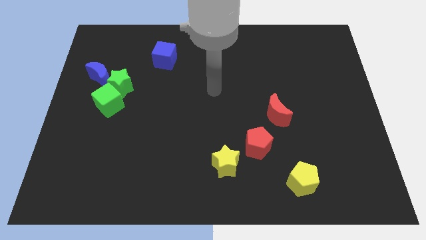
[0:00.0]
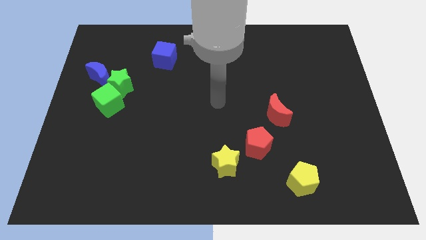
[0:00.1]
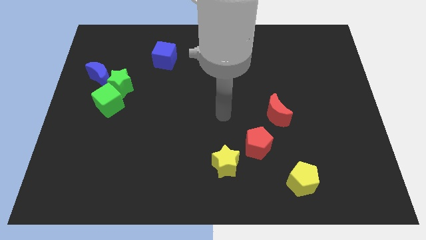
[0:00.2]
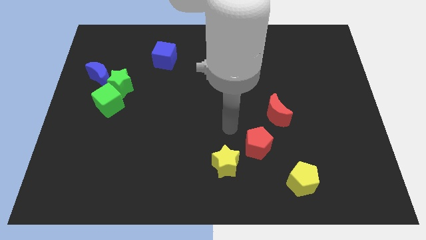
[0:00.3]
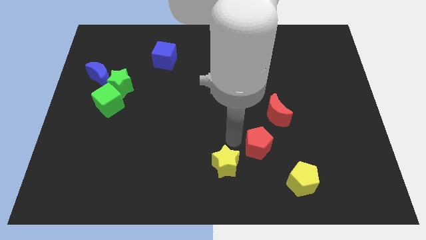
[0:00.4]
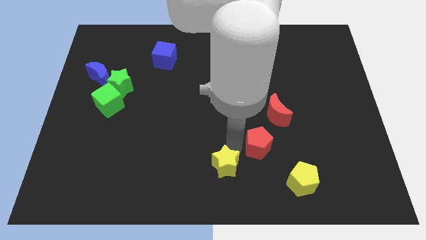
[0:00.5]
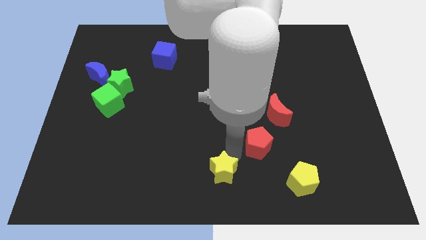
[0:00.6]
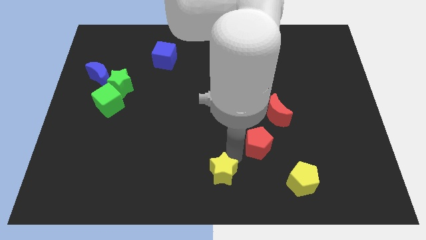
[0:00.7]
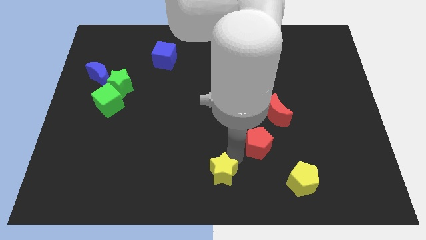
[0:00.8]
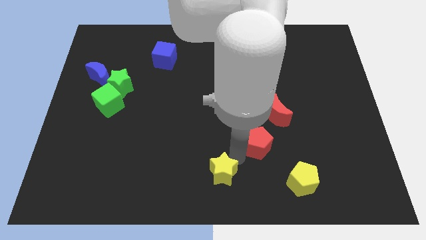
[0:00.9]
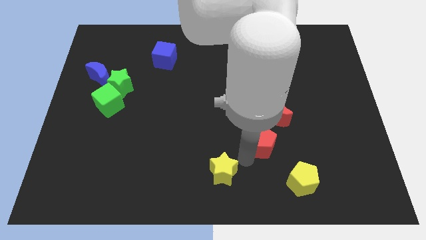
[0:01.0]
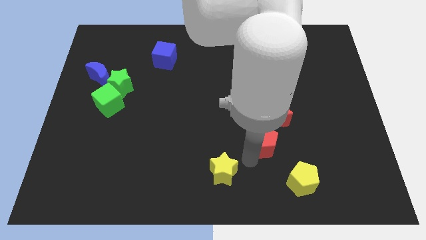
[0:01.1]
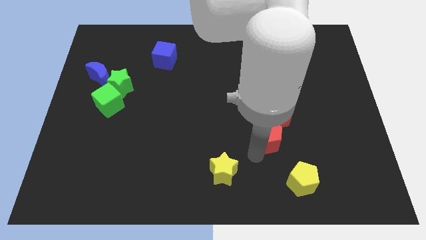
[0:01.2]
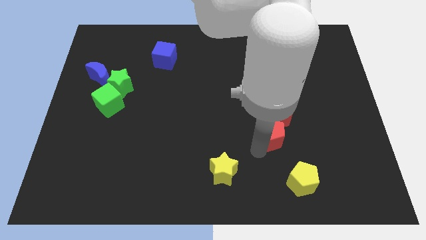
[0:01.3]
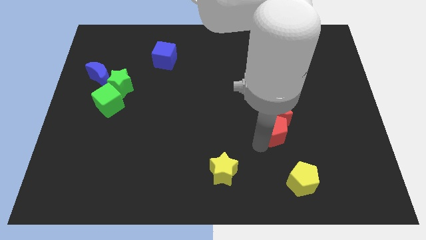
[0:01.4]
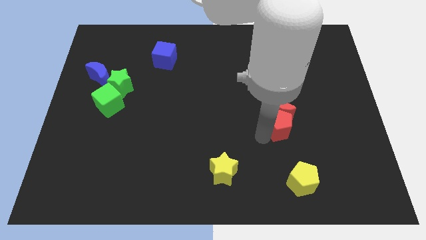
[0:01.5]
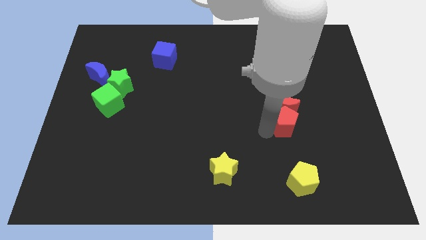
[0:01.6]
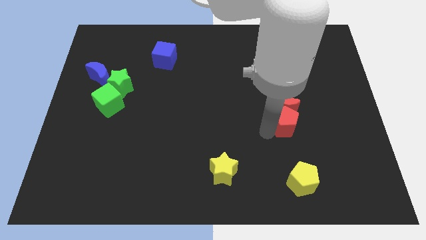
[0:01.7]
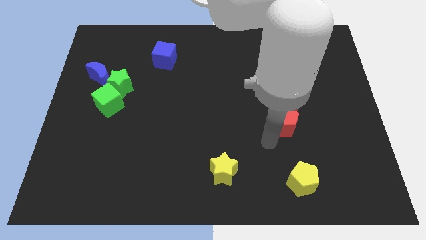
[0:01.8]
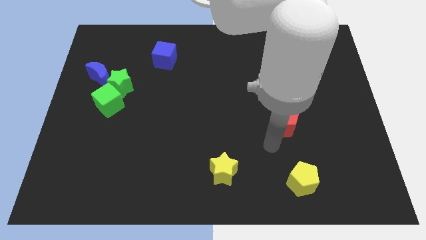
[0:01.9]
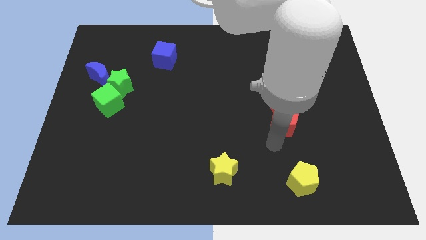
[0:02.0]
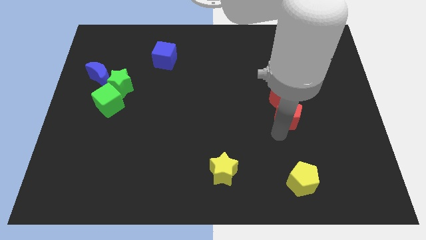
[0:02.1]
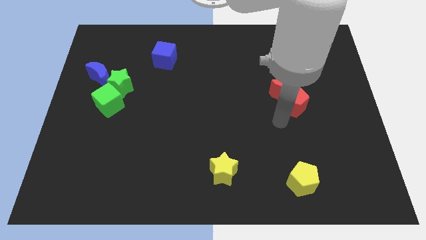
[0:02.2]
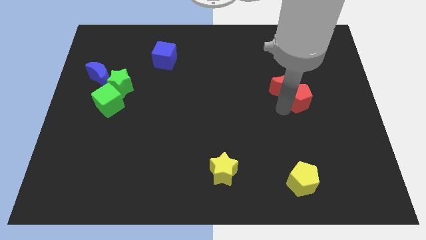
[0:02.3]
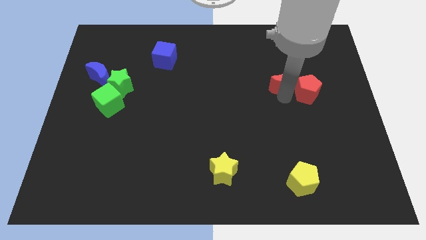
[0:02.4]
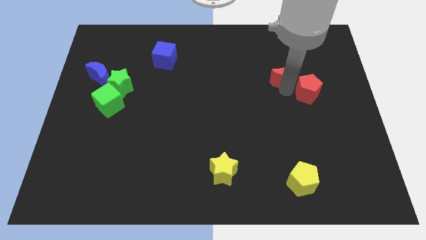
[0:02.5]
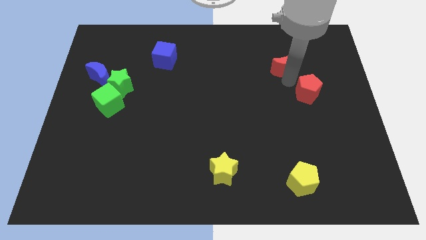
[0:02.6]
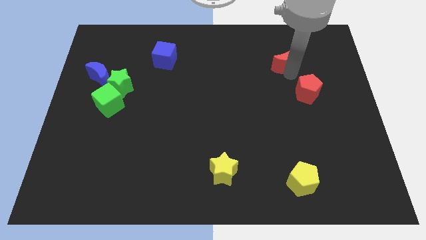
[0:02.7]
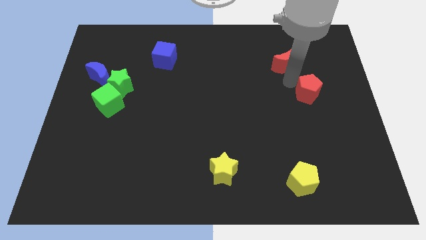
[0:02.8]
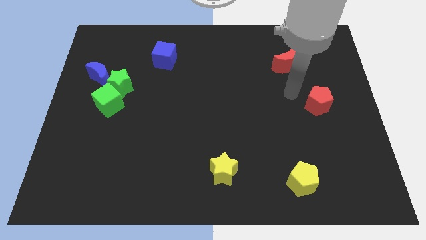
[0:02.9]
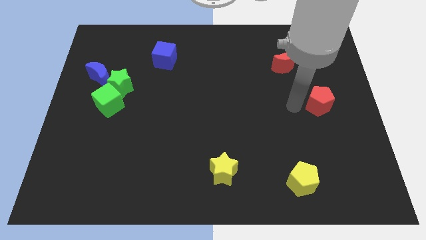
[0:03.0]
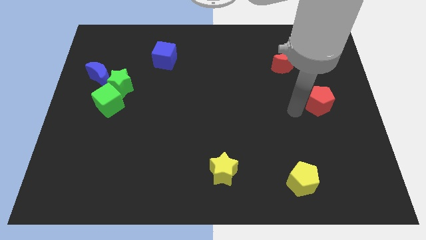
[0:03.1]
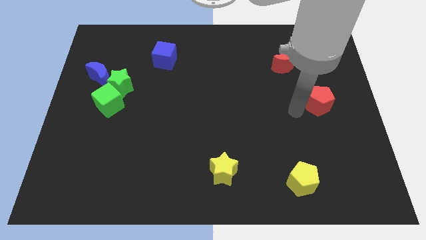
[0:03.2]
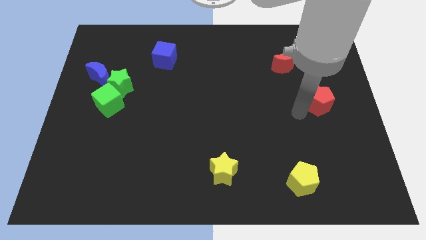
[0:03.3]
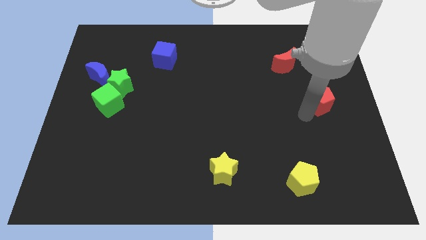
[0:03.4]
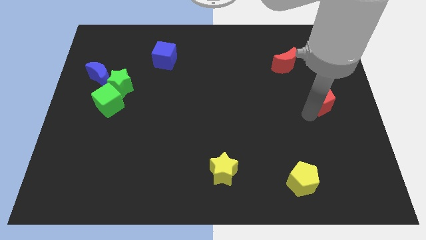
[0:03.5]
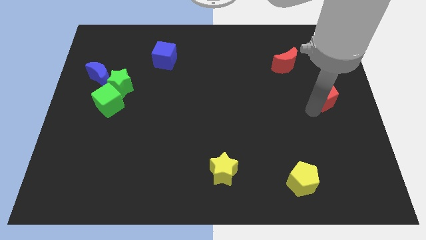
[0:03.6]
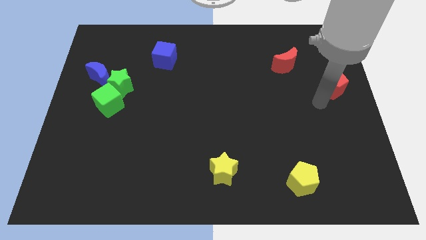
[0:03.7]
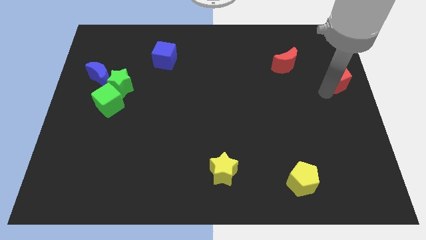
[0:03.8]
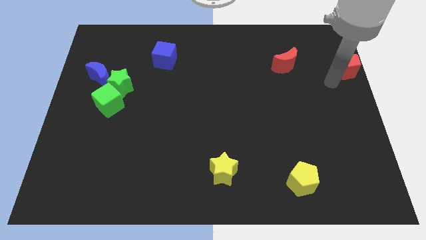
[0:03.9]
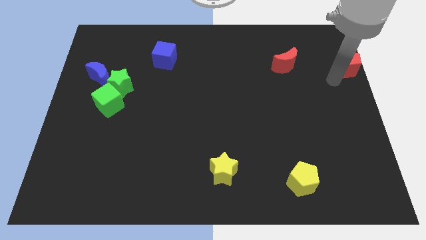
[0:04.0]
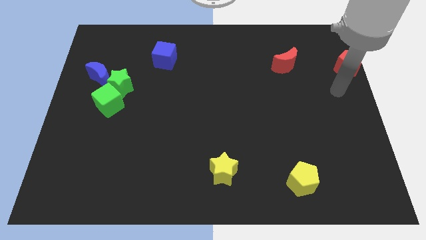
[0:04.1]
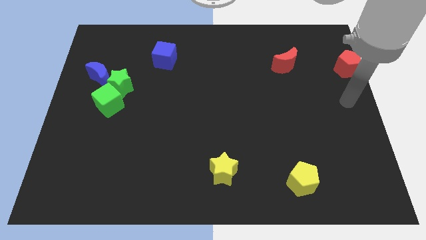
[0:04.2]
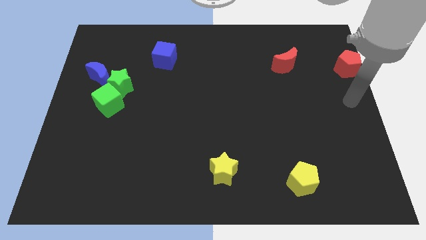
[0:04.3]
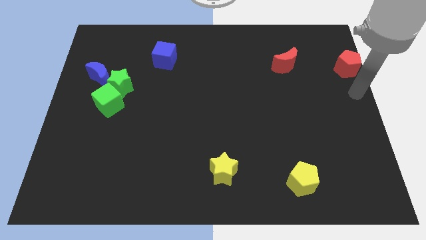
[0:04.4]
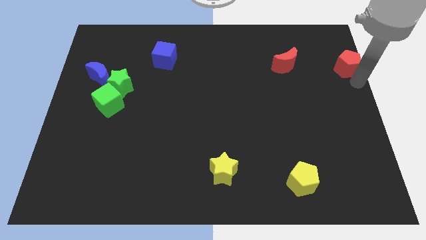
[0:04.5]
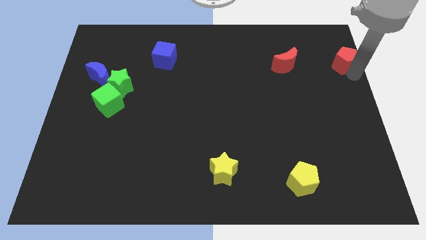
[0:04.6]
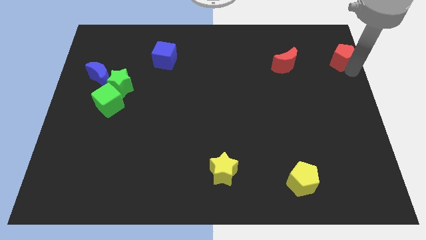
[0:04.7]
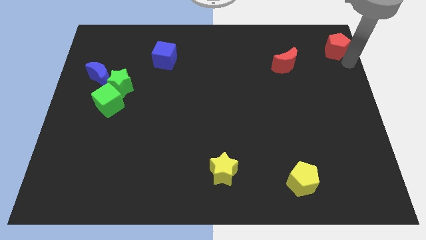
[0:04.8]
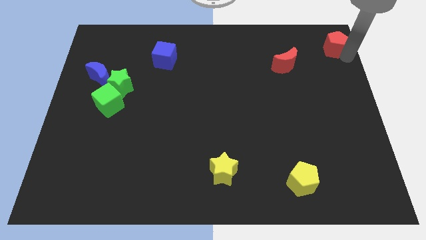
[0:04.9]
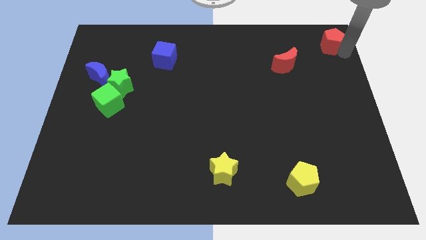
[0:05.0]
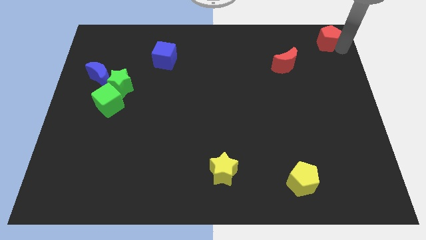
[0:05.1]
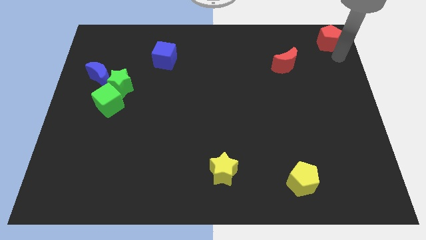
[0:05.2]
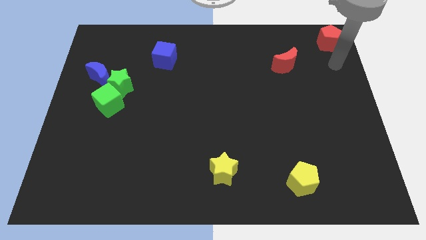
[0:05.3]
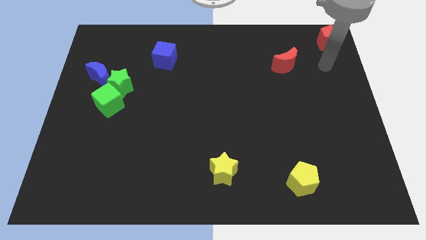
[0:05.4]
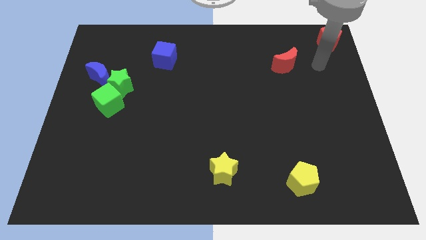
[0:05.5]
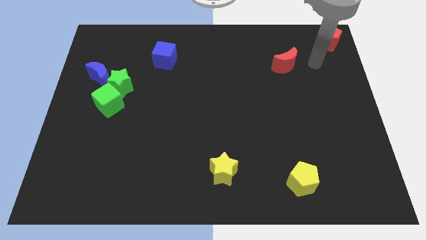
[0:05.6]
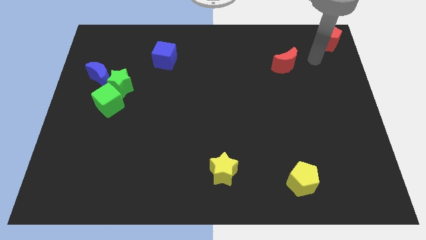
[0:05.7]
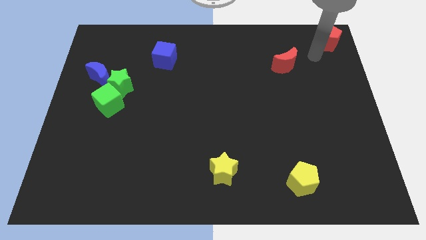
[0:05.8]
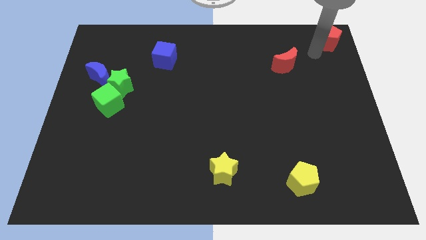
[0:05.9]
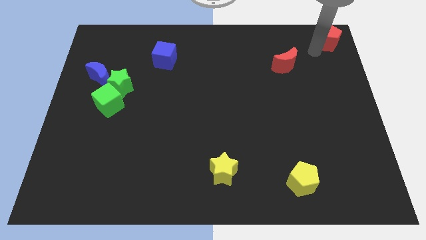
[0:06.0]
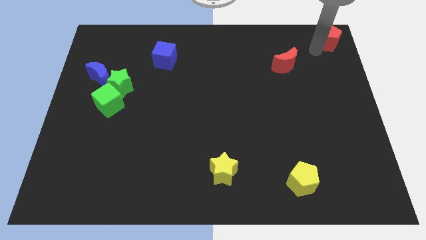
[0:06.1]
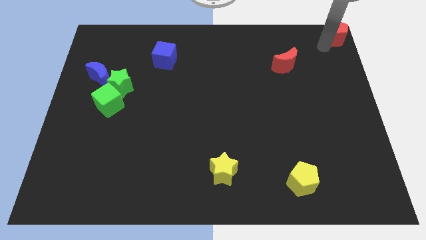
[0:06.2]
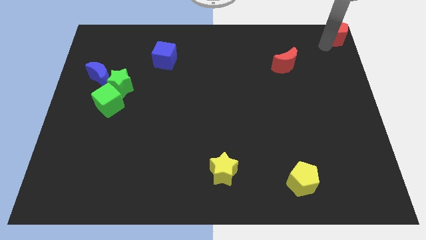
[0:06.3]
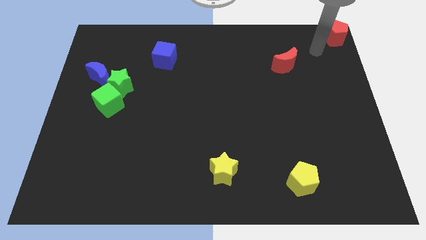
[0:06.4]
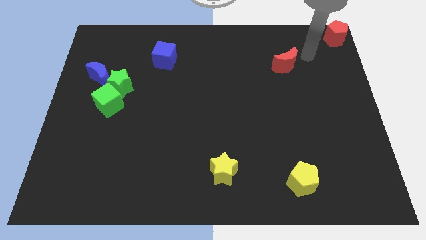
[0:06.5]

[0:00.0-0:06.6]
adjust the red moon vertically on top of the yellow pentagon

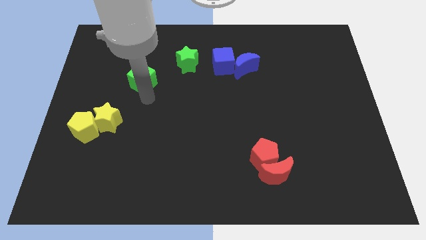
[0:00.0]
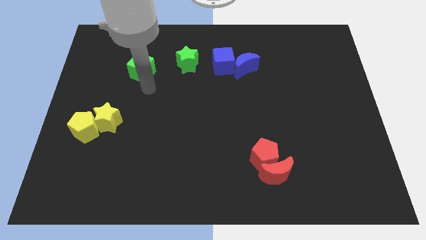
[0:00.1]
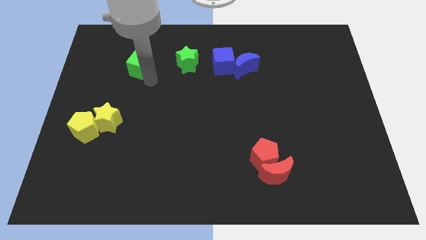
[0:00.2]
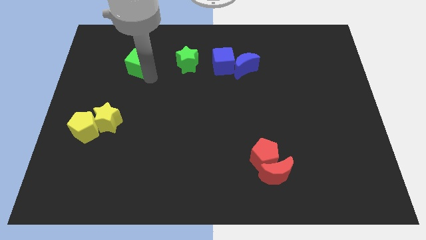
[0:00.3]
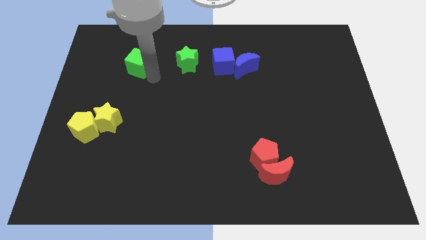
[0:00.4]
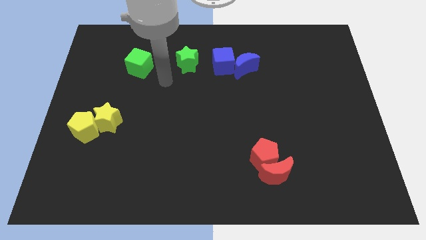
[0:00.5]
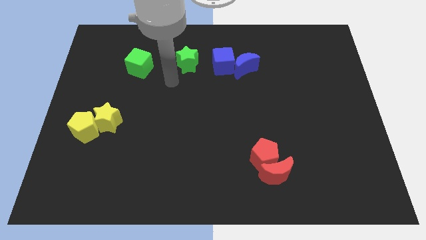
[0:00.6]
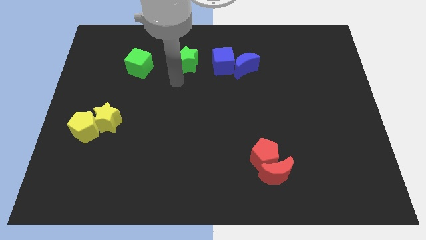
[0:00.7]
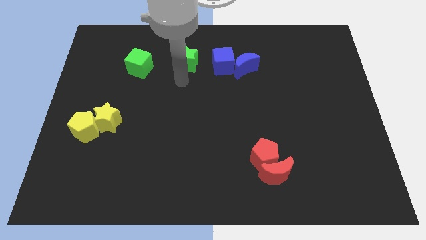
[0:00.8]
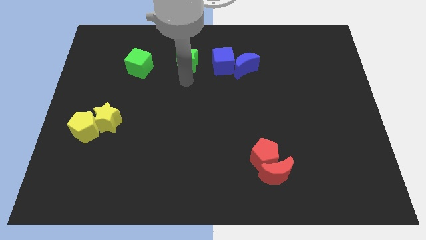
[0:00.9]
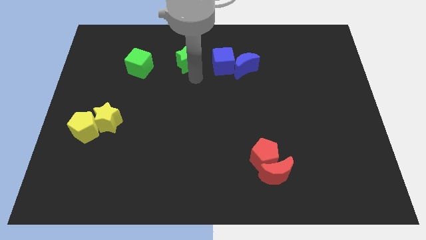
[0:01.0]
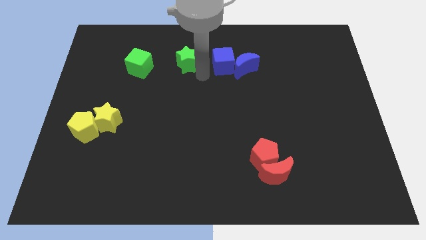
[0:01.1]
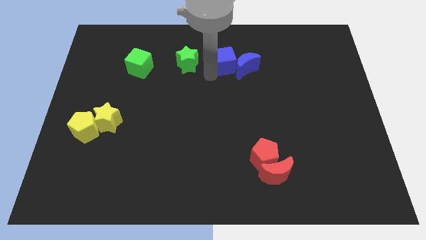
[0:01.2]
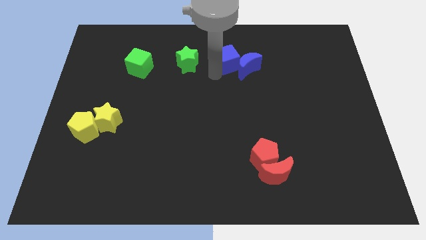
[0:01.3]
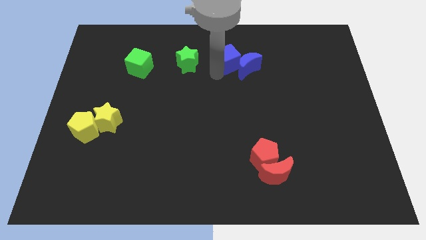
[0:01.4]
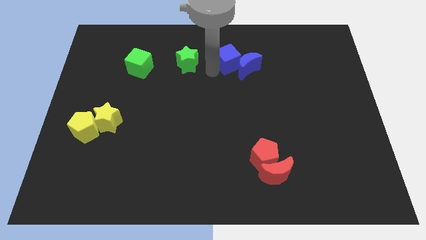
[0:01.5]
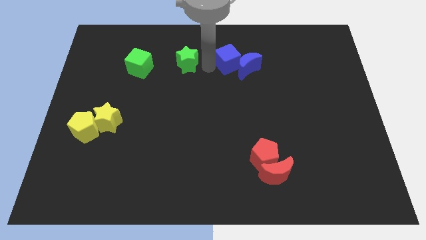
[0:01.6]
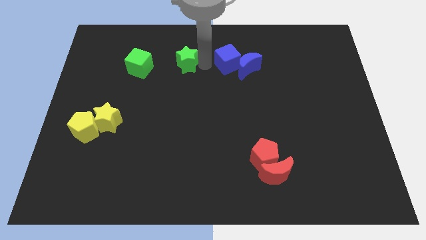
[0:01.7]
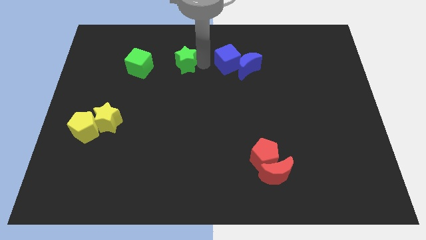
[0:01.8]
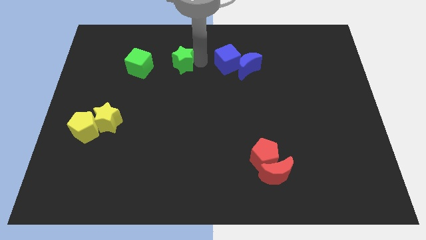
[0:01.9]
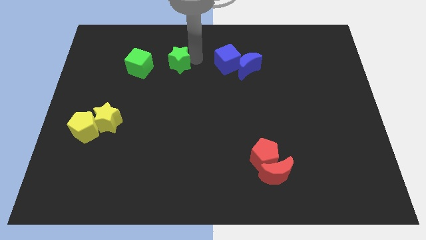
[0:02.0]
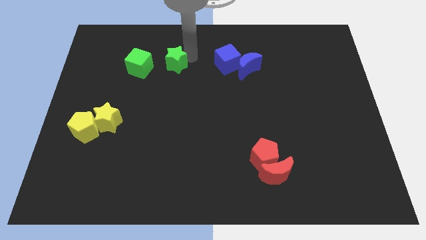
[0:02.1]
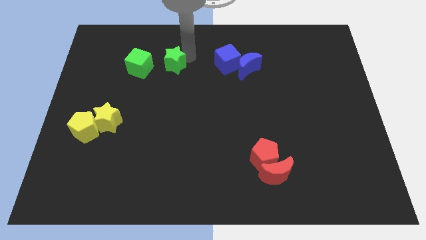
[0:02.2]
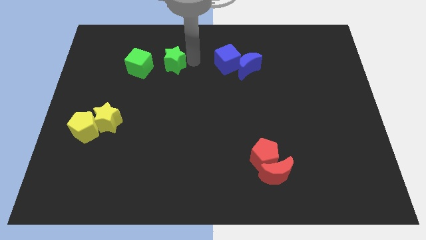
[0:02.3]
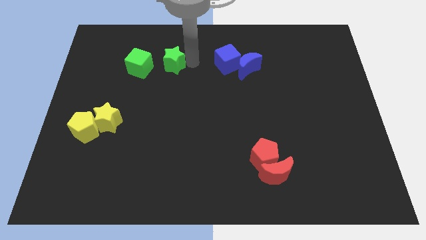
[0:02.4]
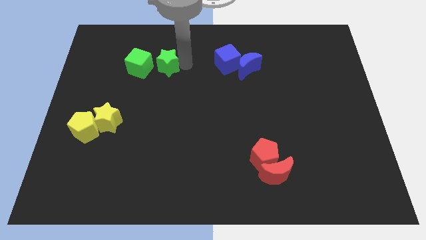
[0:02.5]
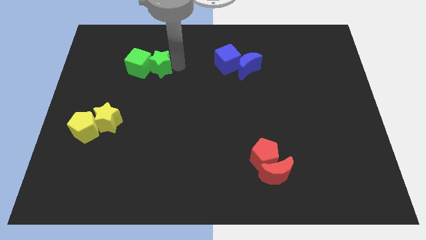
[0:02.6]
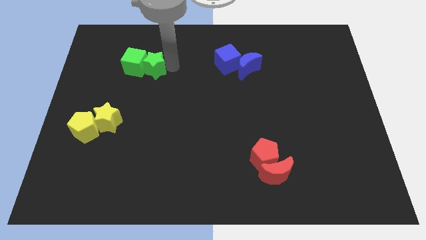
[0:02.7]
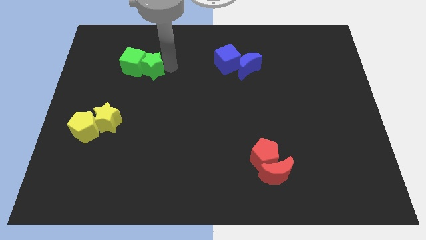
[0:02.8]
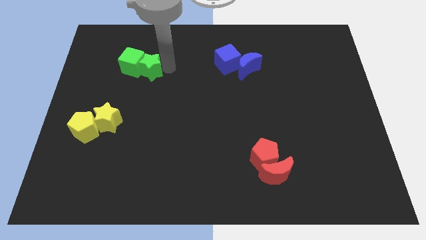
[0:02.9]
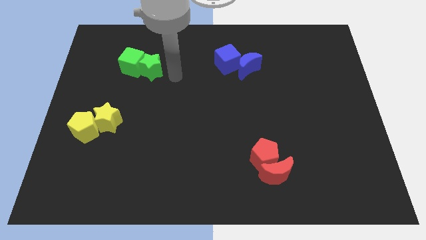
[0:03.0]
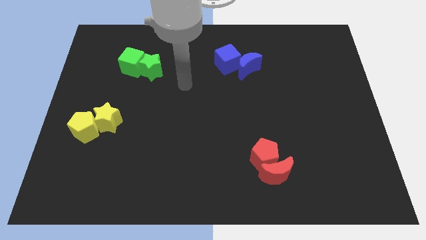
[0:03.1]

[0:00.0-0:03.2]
push the green star into the green cube
